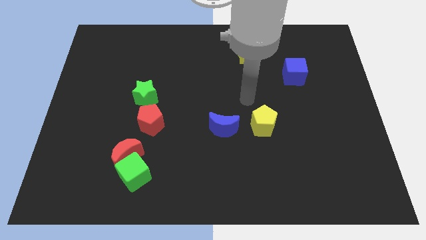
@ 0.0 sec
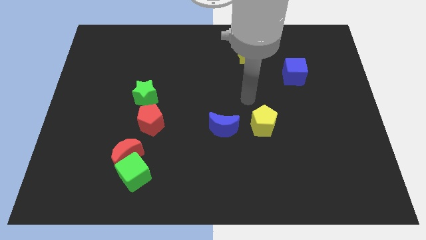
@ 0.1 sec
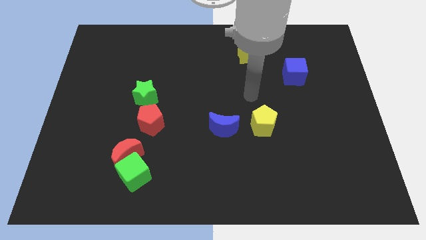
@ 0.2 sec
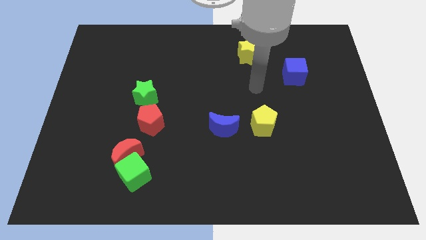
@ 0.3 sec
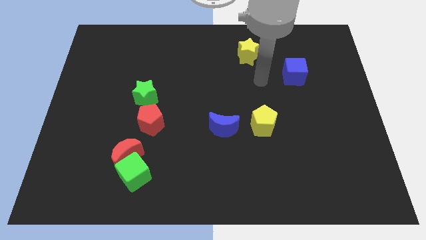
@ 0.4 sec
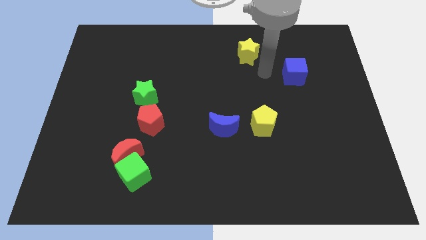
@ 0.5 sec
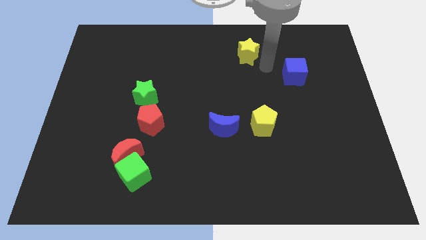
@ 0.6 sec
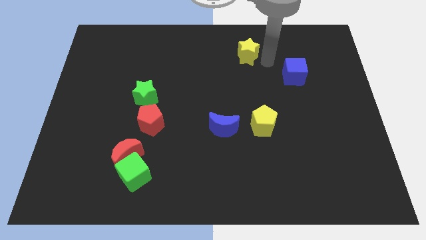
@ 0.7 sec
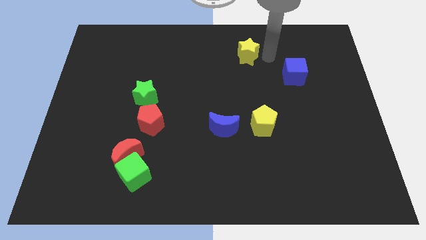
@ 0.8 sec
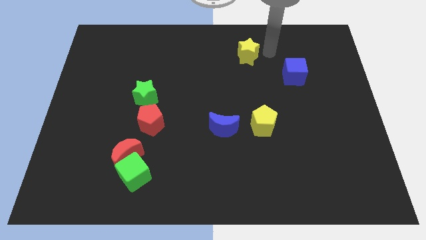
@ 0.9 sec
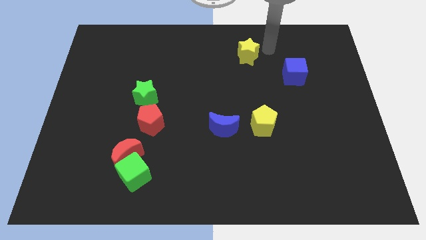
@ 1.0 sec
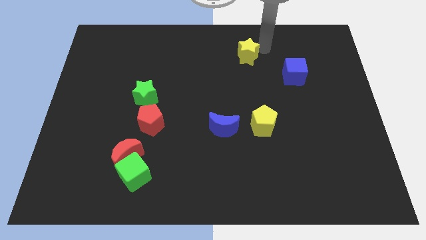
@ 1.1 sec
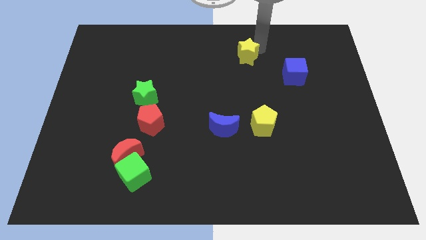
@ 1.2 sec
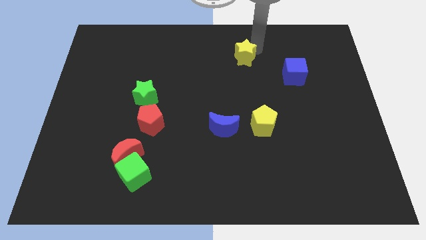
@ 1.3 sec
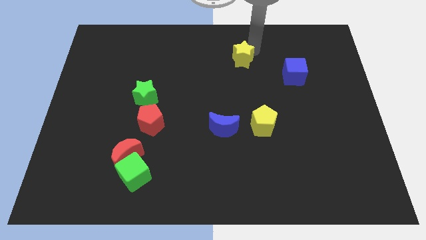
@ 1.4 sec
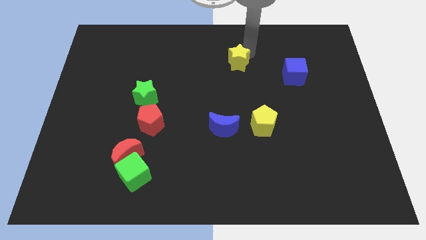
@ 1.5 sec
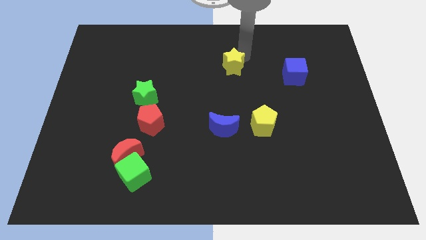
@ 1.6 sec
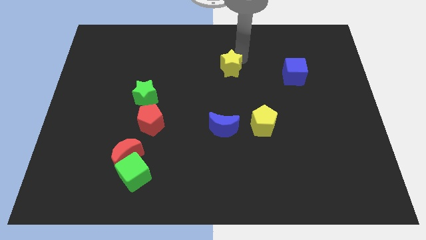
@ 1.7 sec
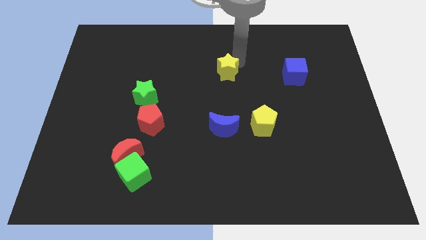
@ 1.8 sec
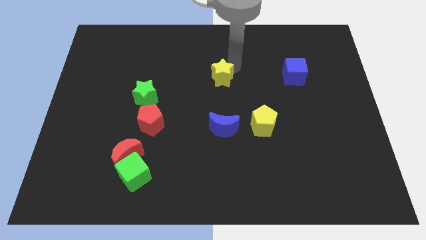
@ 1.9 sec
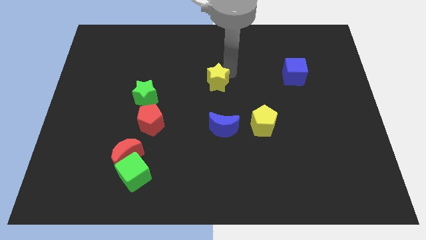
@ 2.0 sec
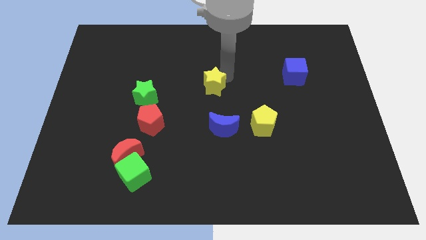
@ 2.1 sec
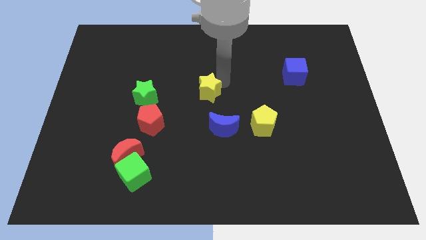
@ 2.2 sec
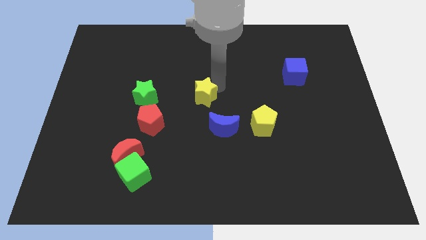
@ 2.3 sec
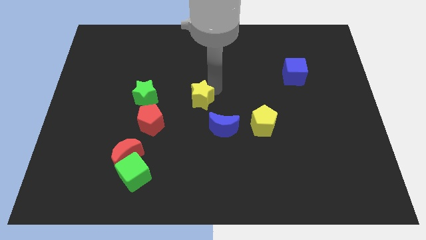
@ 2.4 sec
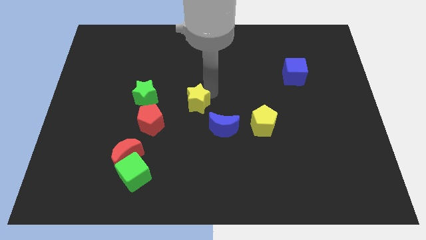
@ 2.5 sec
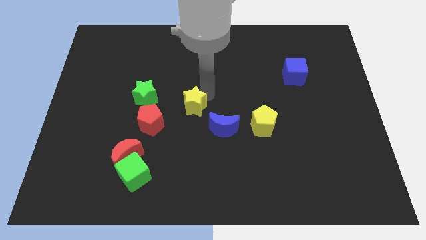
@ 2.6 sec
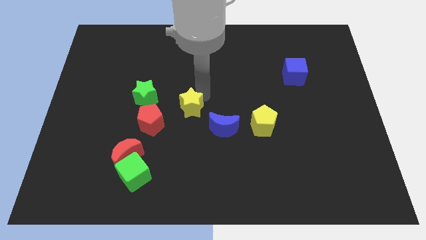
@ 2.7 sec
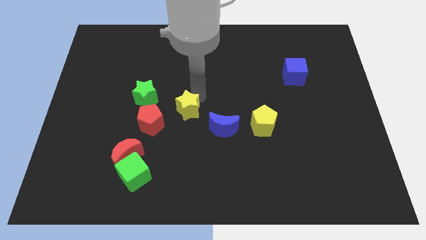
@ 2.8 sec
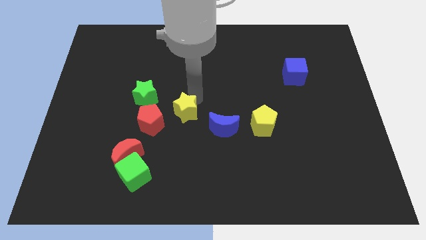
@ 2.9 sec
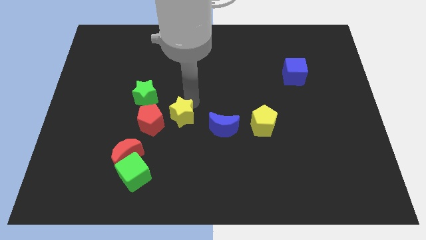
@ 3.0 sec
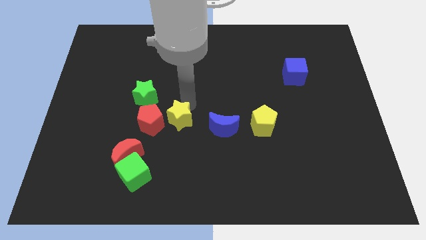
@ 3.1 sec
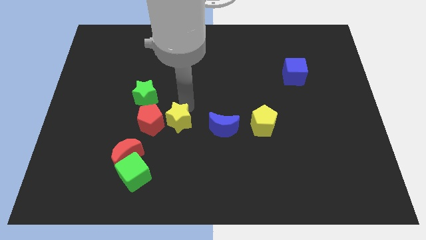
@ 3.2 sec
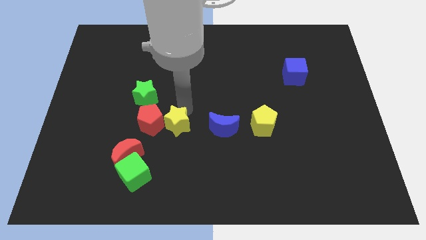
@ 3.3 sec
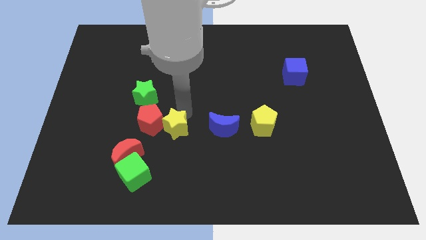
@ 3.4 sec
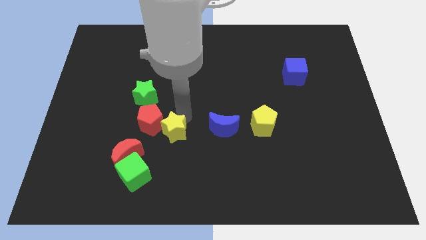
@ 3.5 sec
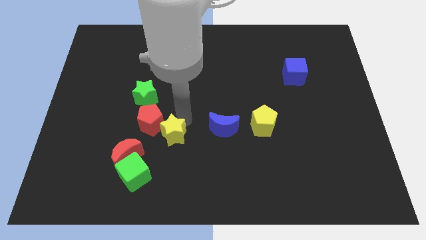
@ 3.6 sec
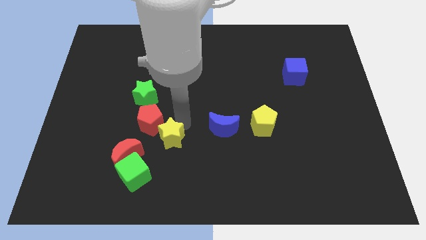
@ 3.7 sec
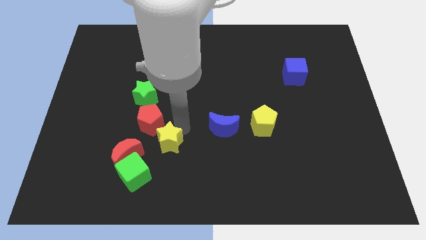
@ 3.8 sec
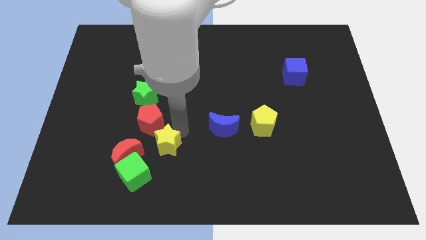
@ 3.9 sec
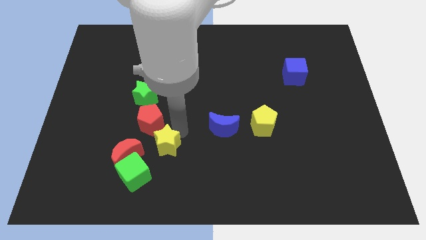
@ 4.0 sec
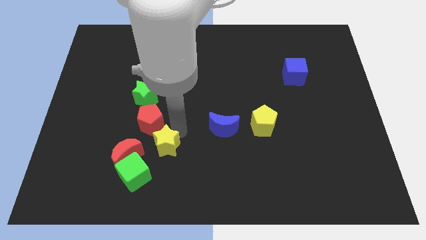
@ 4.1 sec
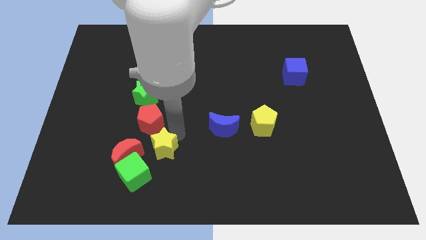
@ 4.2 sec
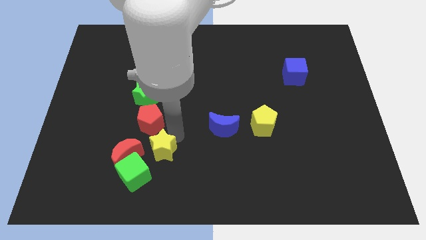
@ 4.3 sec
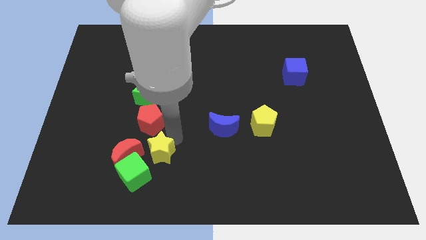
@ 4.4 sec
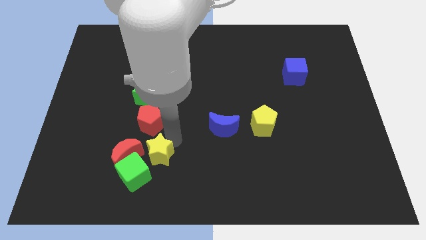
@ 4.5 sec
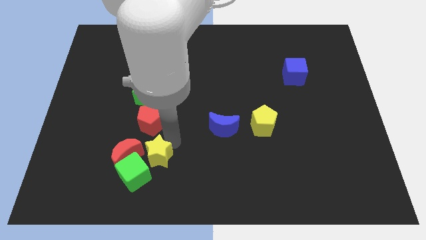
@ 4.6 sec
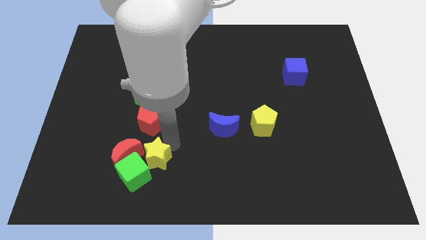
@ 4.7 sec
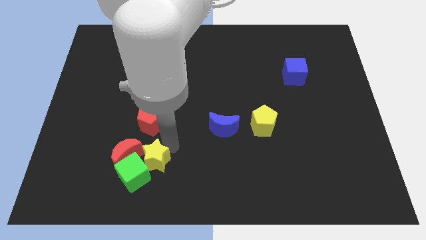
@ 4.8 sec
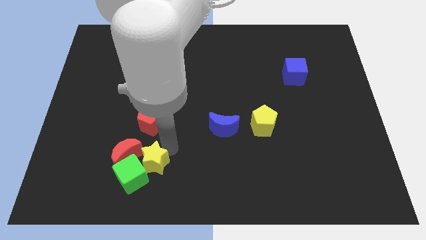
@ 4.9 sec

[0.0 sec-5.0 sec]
slide the yellow star towards the green cube

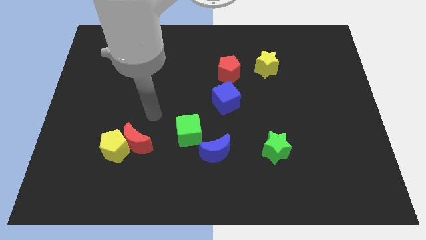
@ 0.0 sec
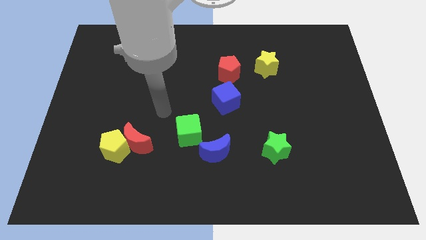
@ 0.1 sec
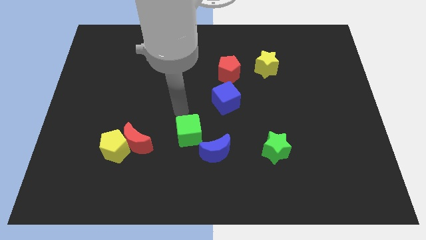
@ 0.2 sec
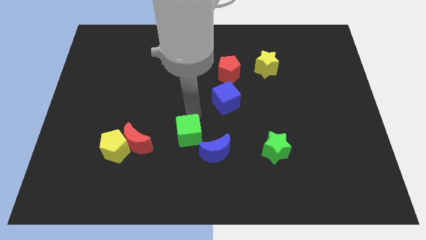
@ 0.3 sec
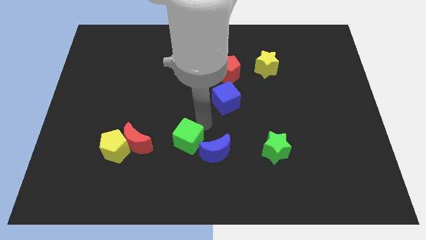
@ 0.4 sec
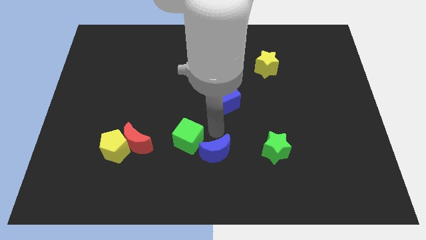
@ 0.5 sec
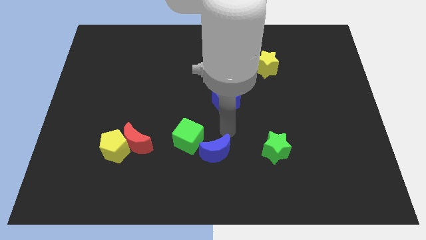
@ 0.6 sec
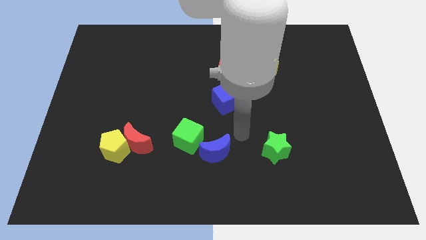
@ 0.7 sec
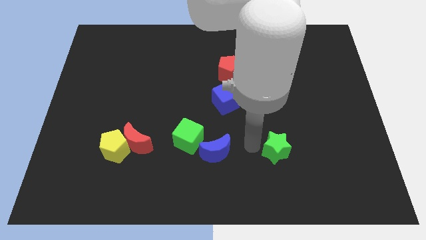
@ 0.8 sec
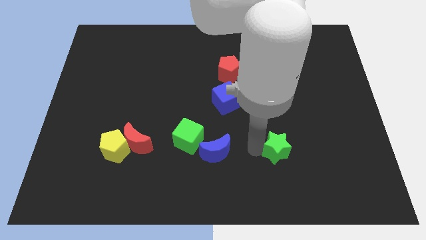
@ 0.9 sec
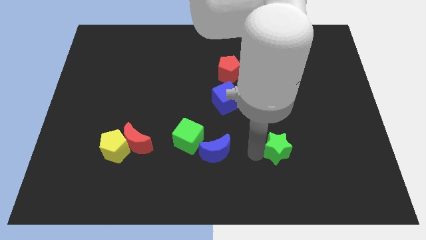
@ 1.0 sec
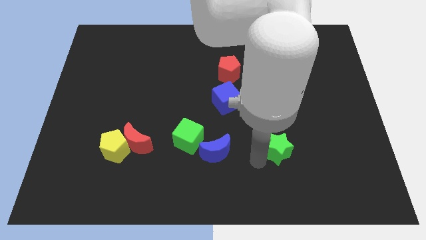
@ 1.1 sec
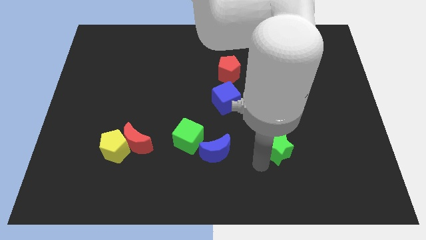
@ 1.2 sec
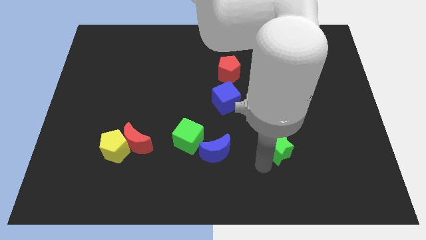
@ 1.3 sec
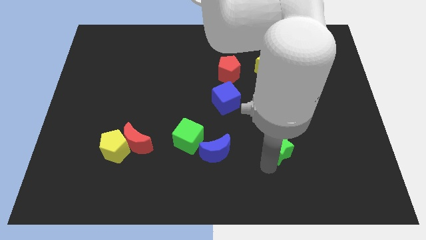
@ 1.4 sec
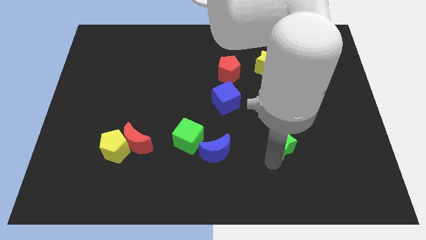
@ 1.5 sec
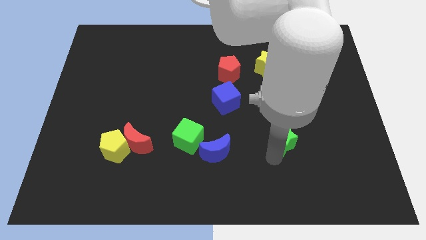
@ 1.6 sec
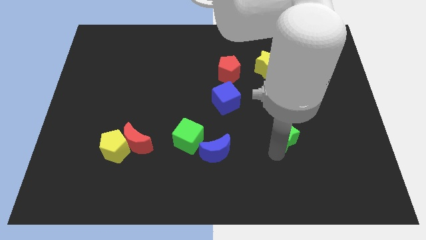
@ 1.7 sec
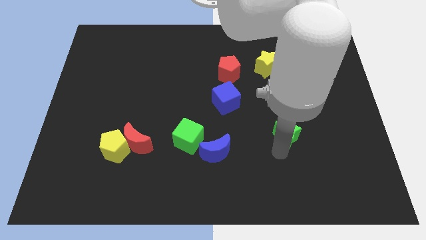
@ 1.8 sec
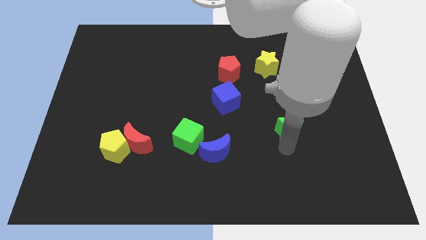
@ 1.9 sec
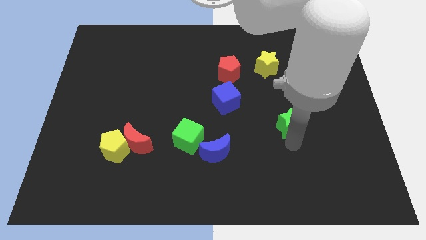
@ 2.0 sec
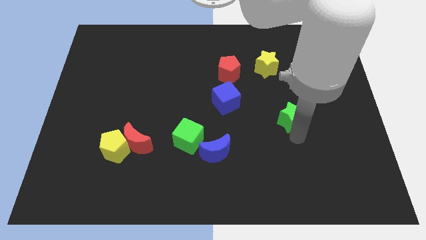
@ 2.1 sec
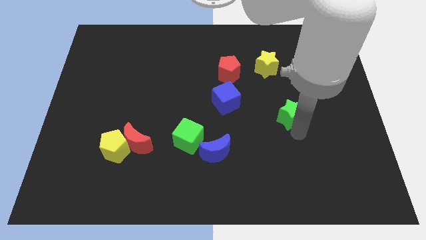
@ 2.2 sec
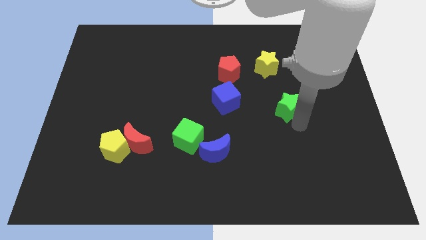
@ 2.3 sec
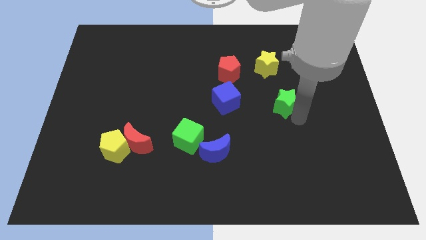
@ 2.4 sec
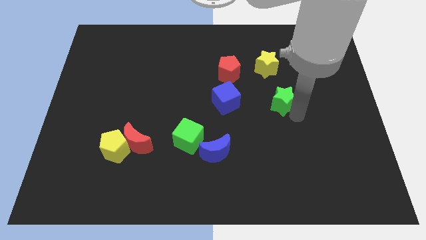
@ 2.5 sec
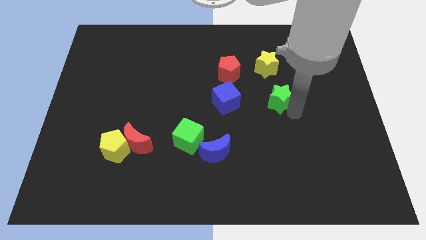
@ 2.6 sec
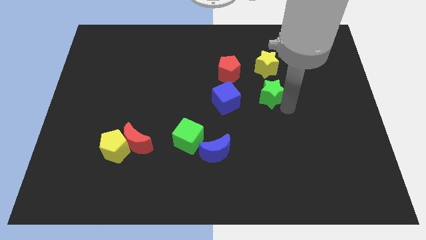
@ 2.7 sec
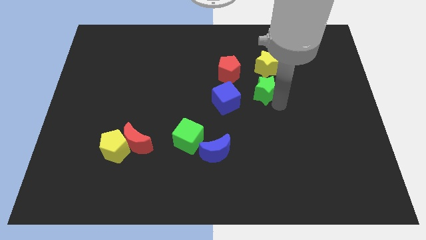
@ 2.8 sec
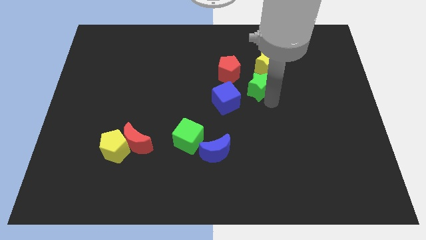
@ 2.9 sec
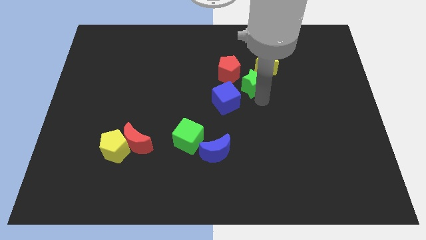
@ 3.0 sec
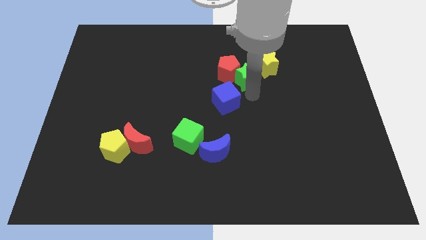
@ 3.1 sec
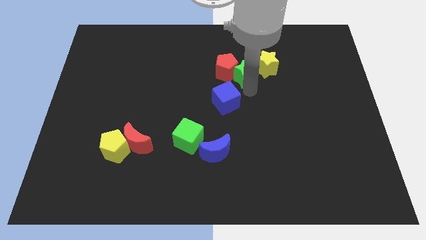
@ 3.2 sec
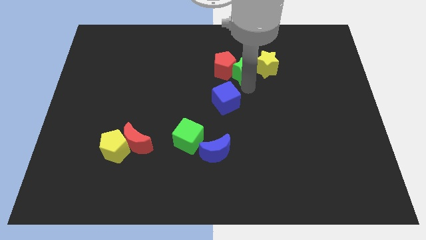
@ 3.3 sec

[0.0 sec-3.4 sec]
put the green star to the yellow star
